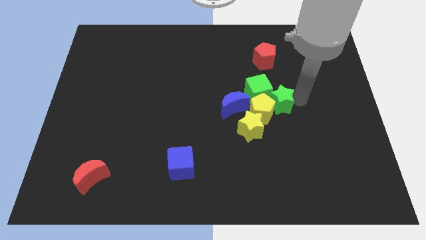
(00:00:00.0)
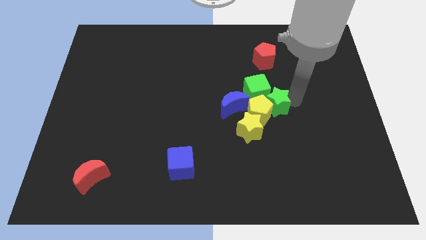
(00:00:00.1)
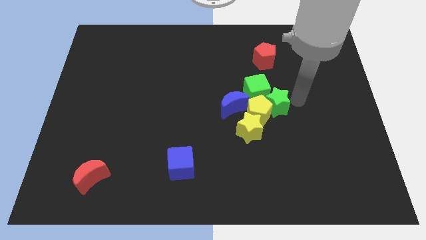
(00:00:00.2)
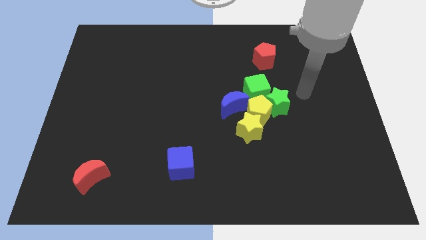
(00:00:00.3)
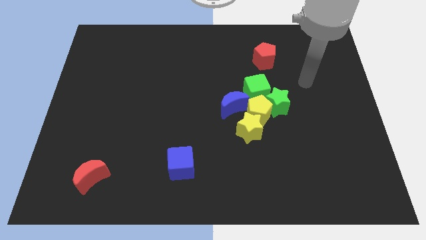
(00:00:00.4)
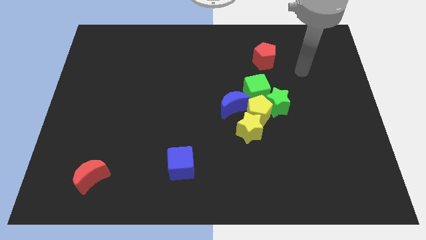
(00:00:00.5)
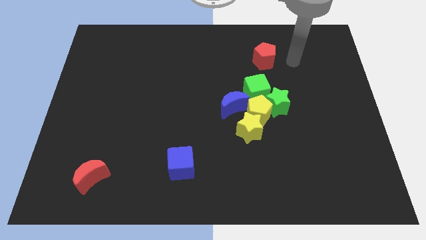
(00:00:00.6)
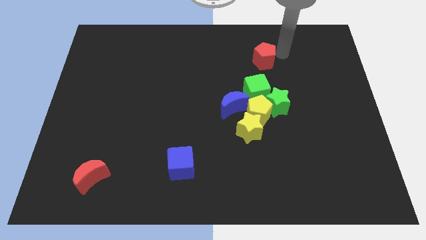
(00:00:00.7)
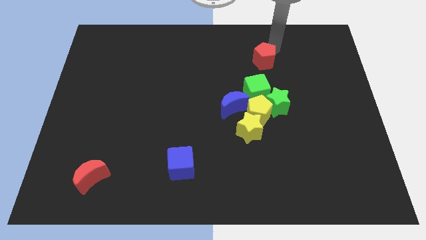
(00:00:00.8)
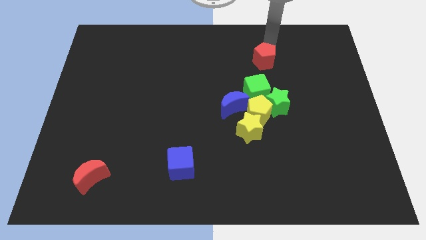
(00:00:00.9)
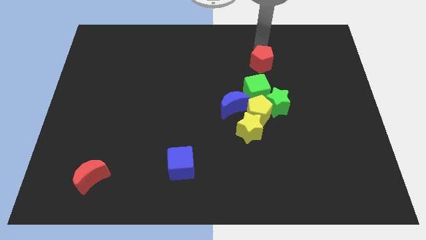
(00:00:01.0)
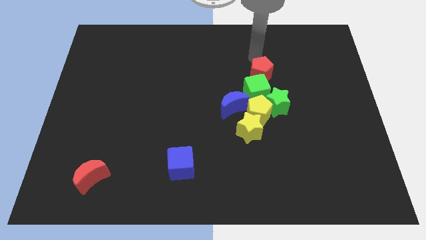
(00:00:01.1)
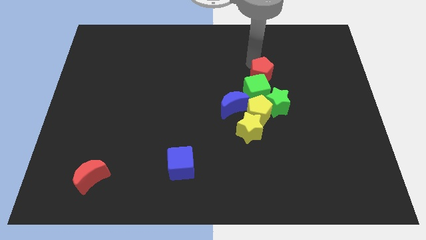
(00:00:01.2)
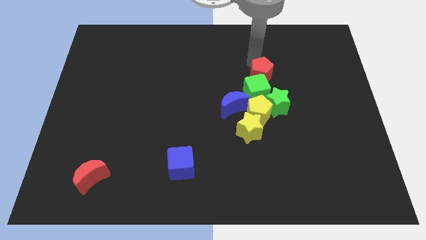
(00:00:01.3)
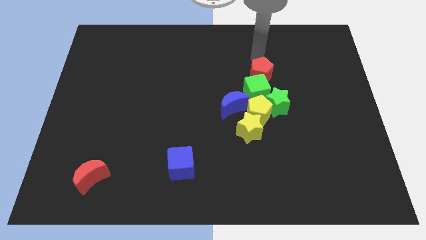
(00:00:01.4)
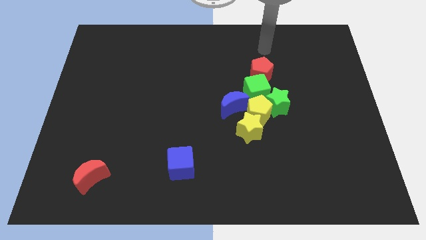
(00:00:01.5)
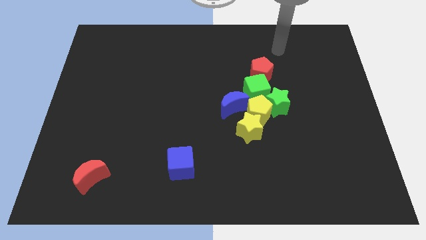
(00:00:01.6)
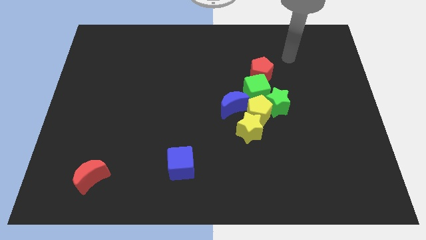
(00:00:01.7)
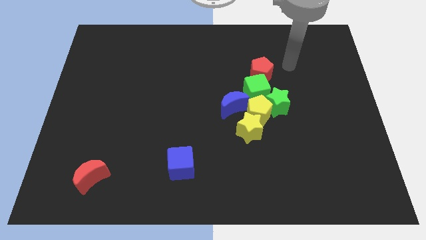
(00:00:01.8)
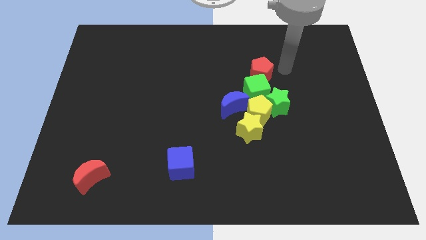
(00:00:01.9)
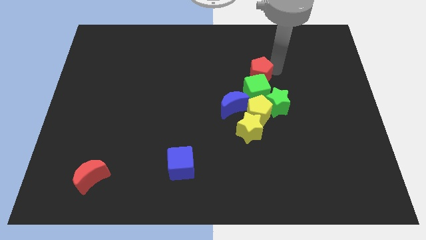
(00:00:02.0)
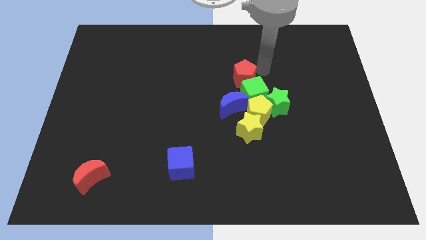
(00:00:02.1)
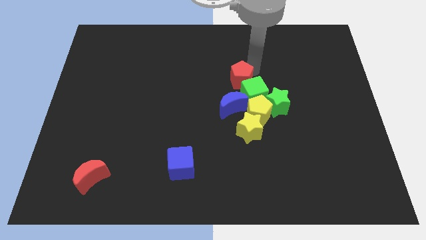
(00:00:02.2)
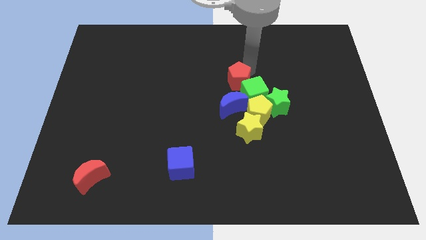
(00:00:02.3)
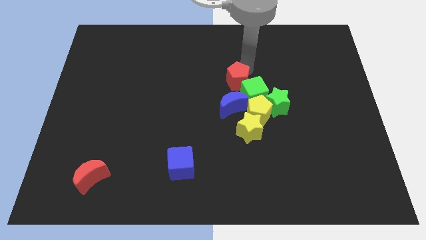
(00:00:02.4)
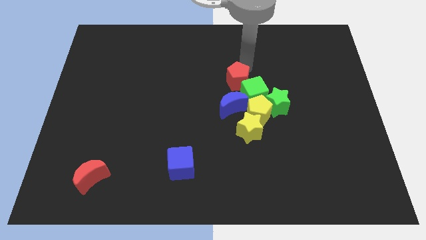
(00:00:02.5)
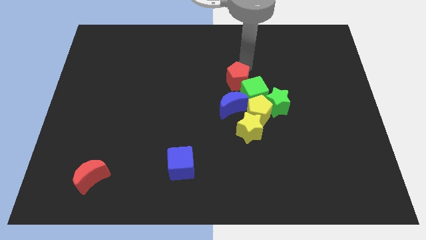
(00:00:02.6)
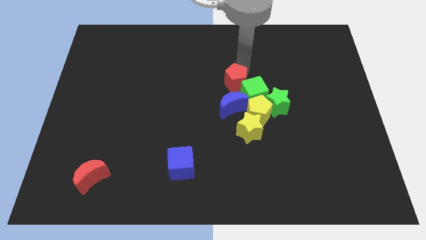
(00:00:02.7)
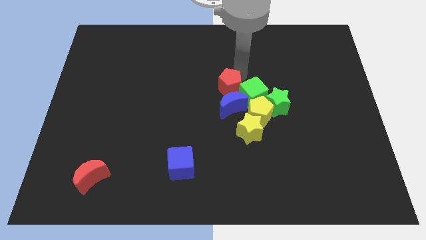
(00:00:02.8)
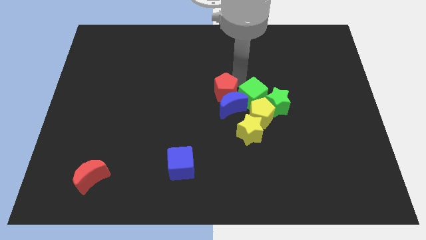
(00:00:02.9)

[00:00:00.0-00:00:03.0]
place the red pentagon above the blue moon

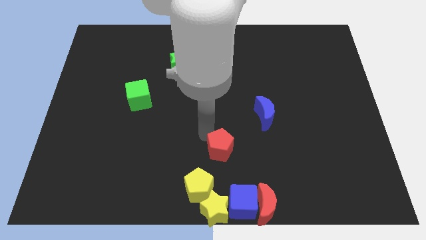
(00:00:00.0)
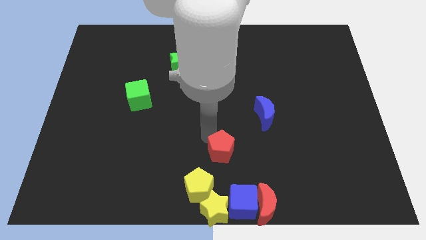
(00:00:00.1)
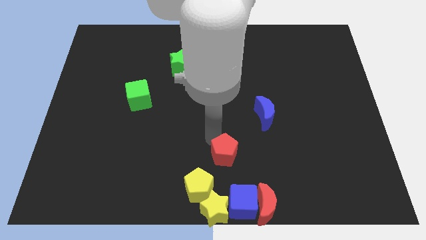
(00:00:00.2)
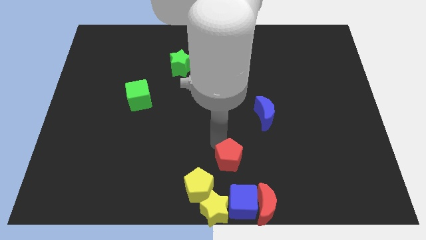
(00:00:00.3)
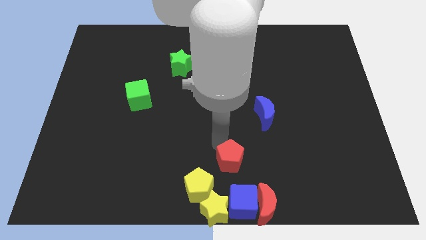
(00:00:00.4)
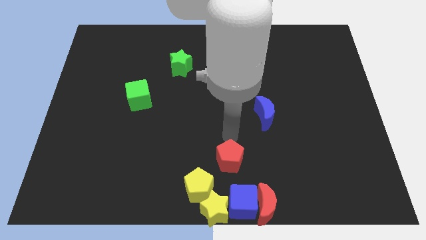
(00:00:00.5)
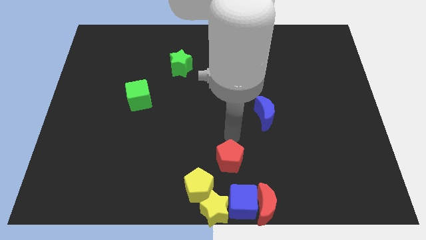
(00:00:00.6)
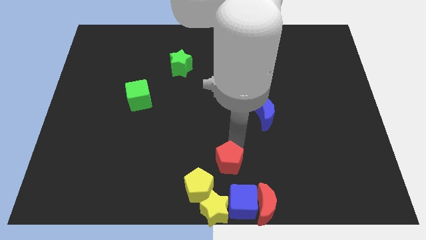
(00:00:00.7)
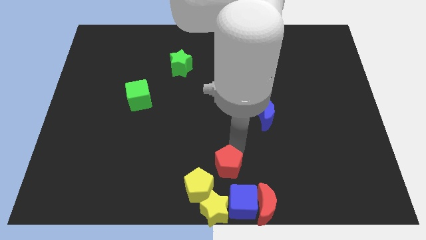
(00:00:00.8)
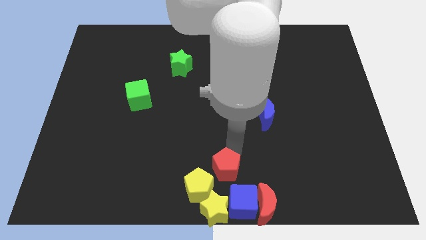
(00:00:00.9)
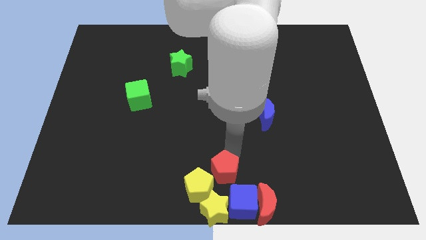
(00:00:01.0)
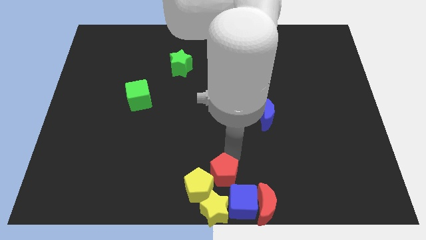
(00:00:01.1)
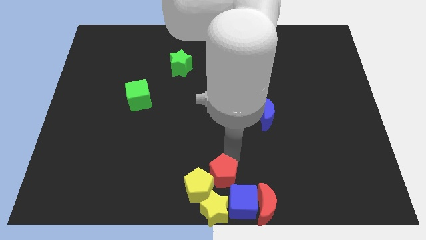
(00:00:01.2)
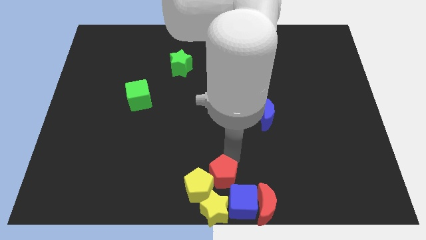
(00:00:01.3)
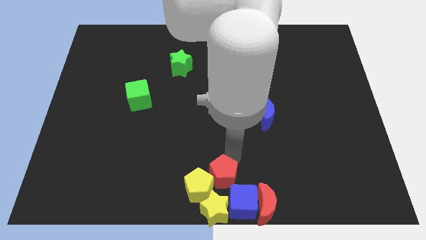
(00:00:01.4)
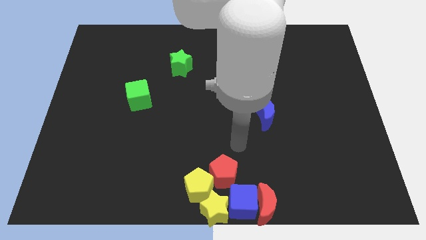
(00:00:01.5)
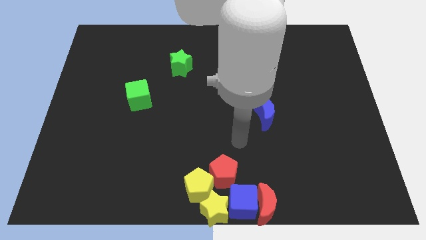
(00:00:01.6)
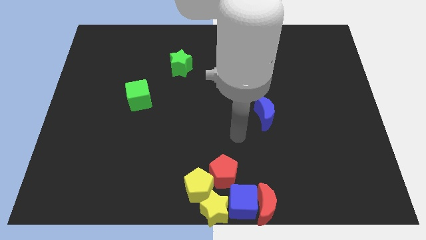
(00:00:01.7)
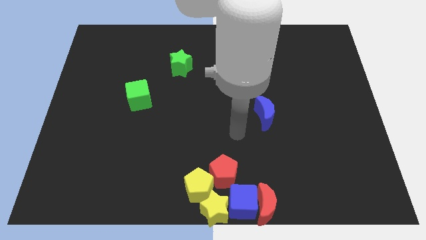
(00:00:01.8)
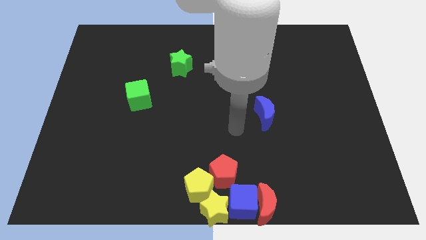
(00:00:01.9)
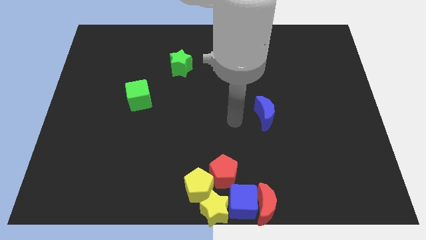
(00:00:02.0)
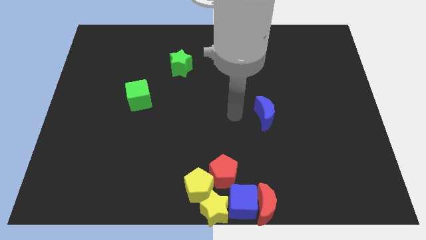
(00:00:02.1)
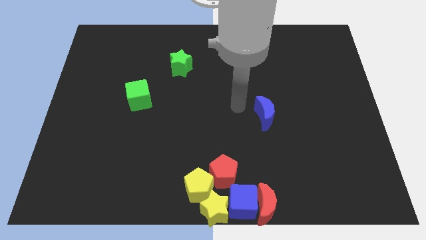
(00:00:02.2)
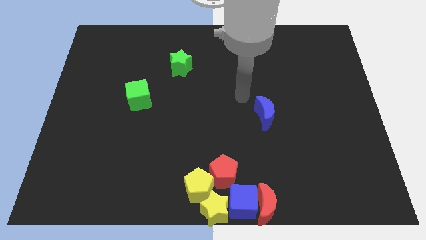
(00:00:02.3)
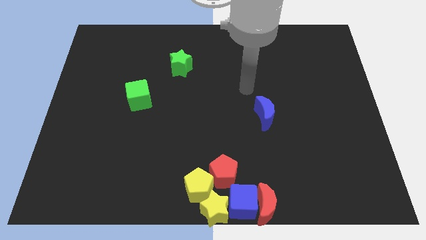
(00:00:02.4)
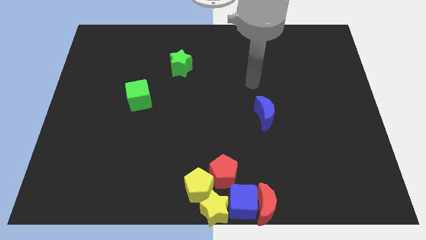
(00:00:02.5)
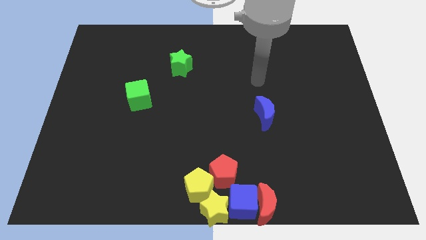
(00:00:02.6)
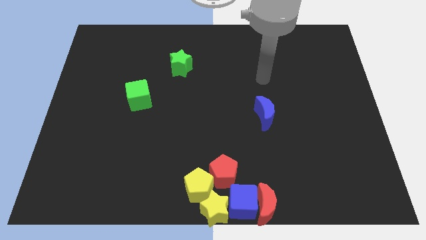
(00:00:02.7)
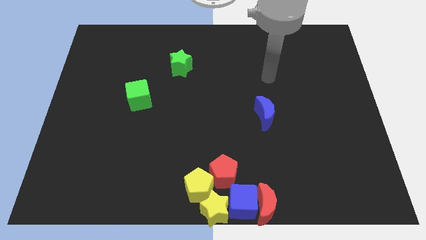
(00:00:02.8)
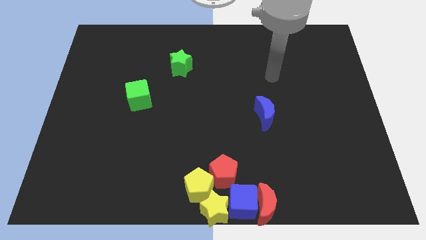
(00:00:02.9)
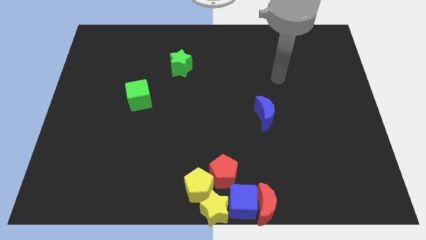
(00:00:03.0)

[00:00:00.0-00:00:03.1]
put the red pentagon and yellow pentagon together

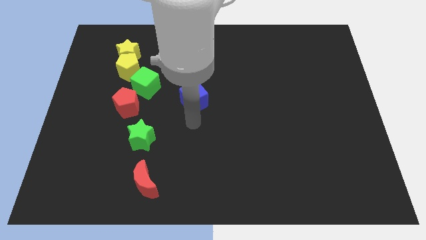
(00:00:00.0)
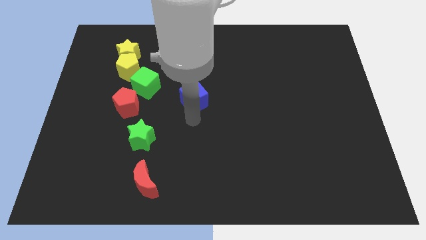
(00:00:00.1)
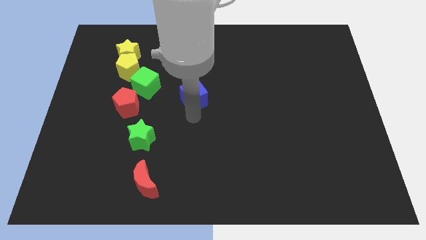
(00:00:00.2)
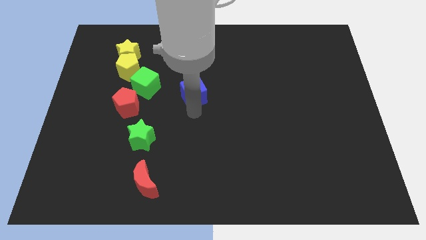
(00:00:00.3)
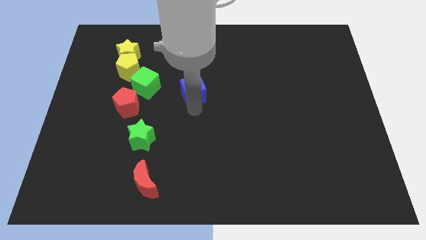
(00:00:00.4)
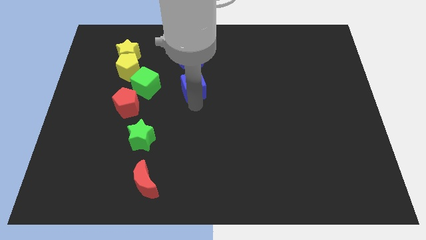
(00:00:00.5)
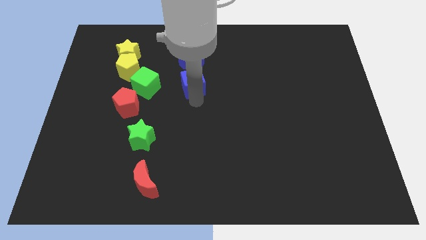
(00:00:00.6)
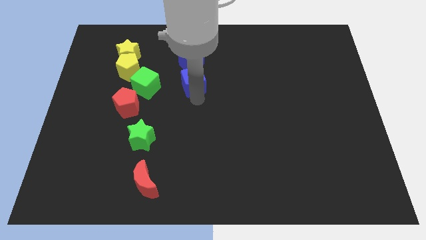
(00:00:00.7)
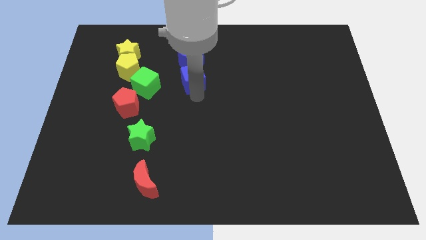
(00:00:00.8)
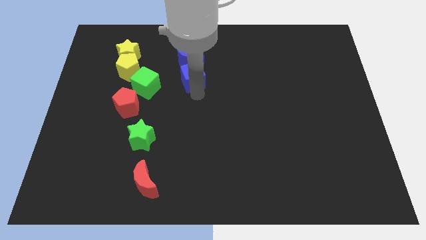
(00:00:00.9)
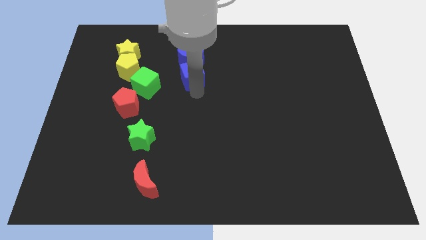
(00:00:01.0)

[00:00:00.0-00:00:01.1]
move the blue cube below the blue crescent

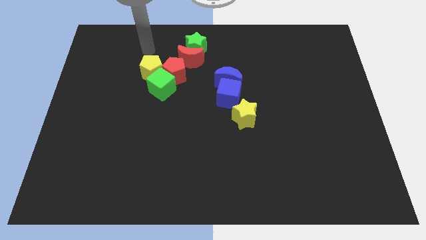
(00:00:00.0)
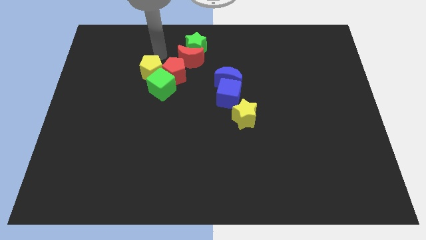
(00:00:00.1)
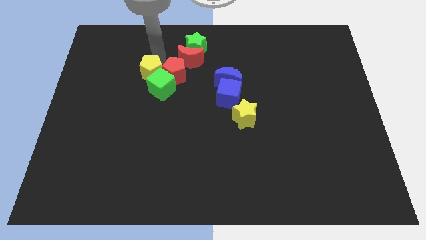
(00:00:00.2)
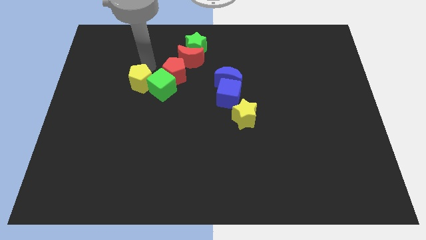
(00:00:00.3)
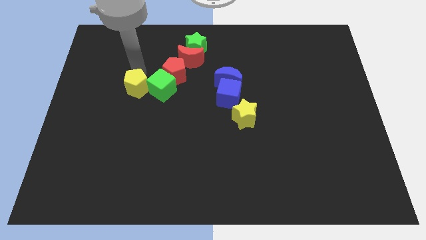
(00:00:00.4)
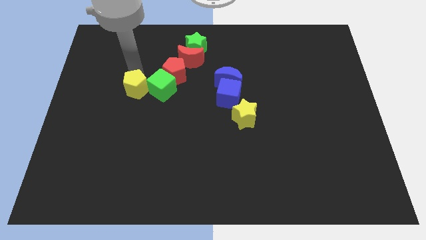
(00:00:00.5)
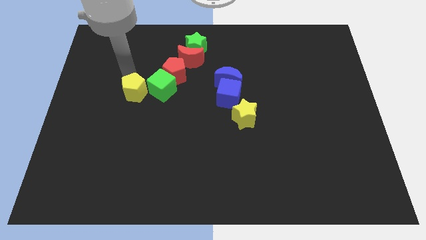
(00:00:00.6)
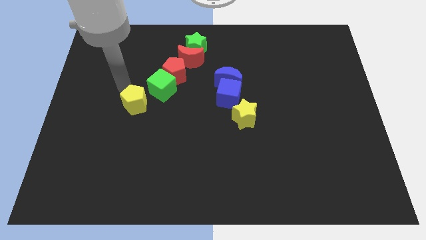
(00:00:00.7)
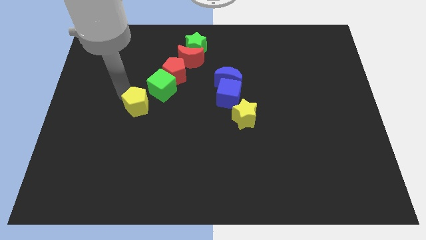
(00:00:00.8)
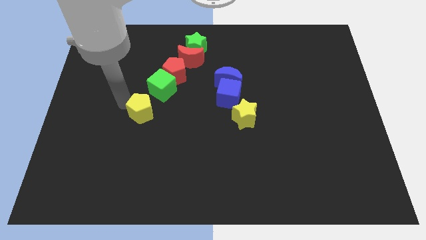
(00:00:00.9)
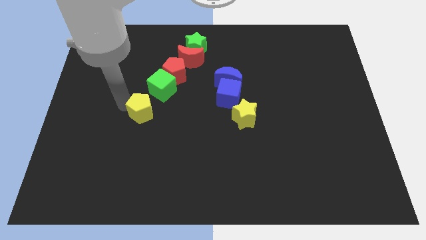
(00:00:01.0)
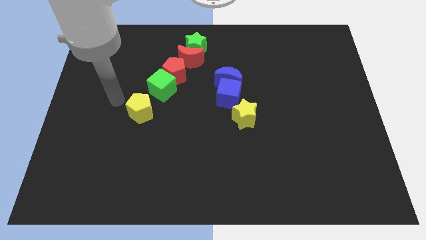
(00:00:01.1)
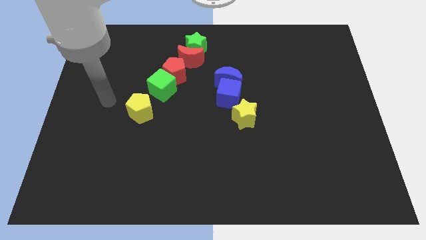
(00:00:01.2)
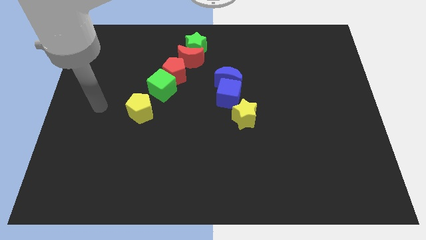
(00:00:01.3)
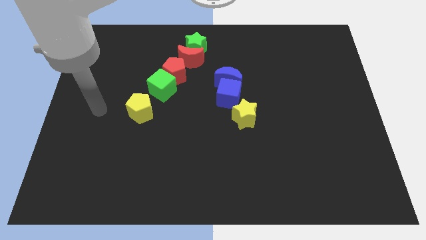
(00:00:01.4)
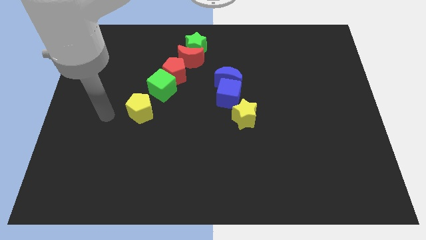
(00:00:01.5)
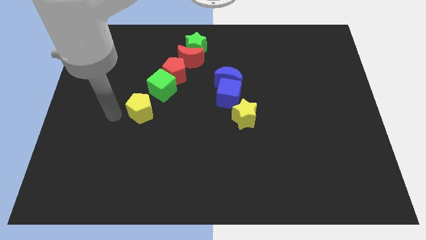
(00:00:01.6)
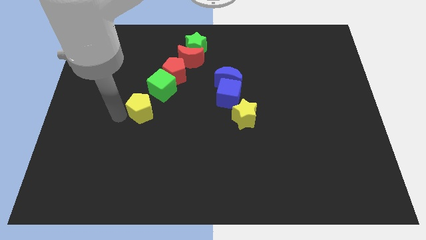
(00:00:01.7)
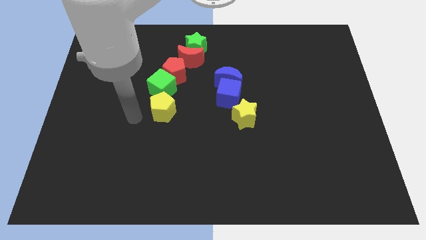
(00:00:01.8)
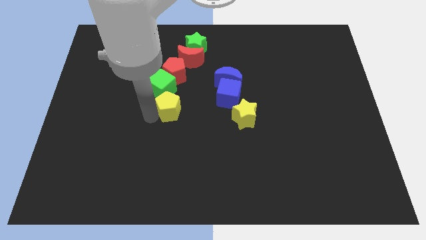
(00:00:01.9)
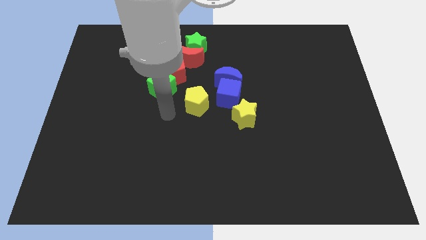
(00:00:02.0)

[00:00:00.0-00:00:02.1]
separate yellow pentagon from green cube
